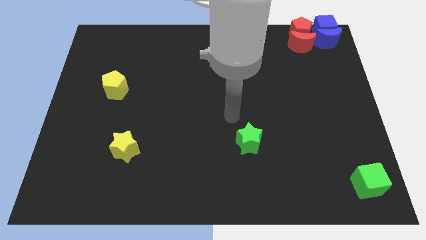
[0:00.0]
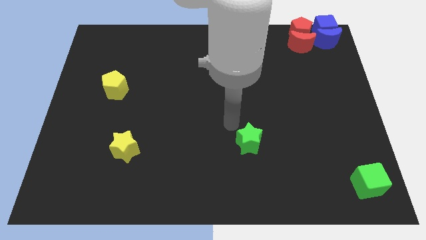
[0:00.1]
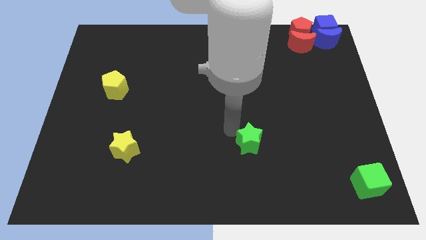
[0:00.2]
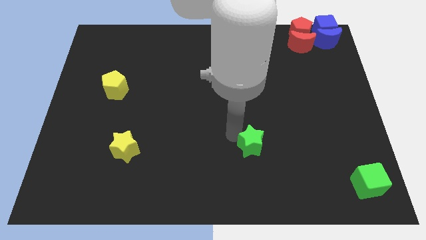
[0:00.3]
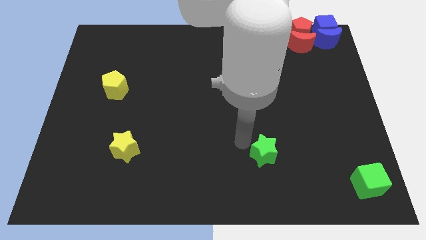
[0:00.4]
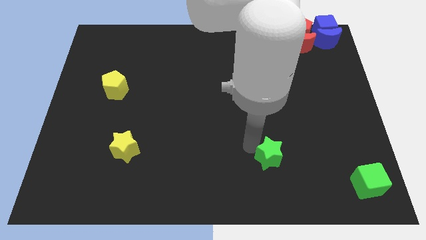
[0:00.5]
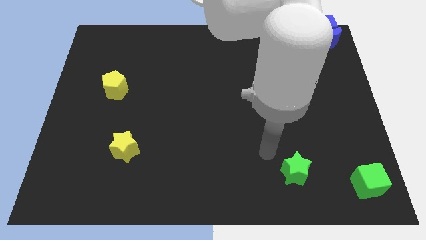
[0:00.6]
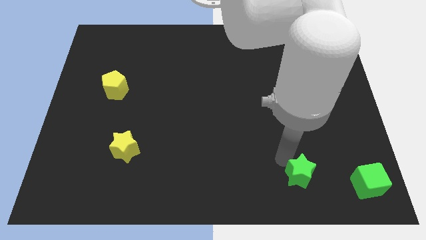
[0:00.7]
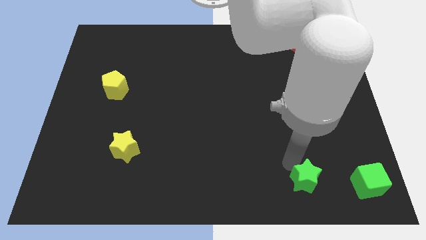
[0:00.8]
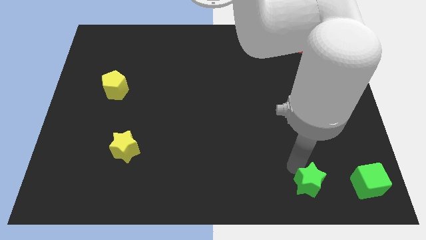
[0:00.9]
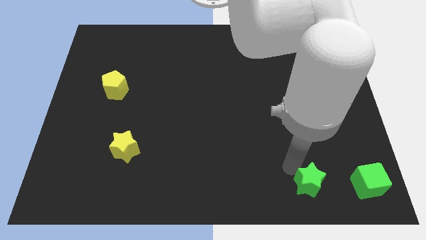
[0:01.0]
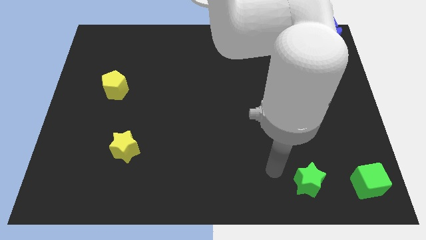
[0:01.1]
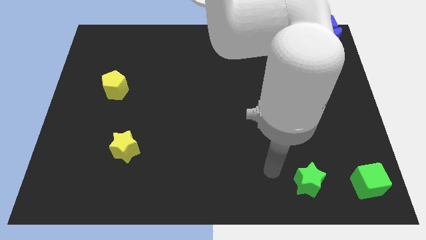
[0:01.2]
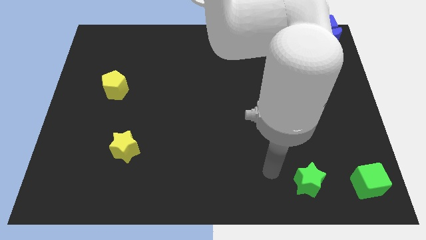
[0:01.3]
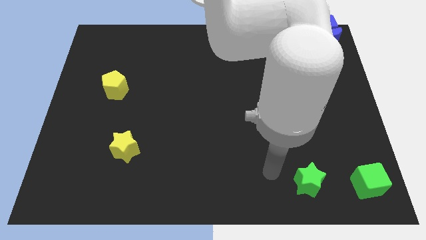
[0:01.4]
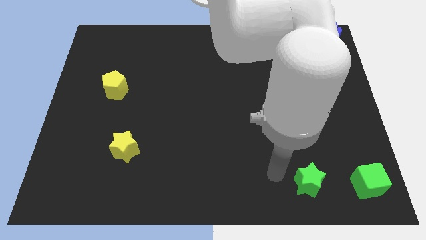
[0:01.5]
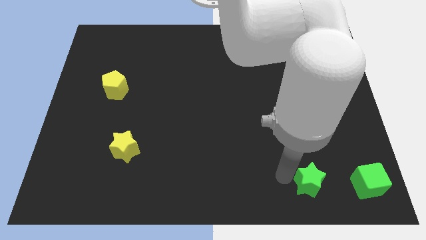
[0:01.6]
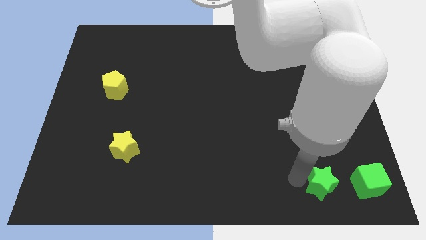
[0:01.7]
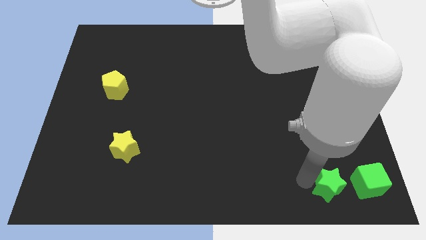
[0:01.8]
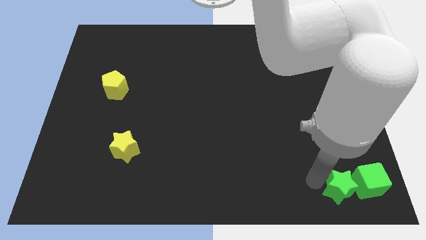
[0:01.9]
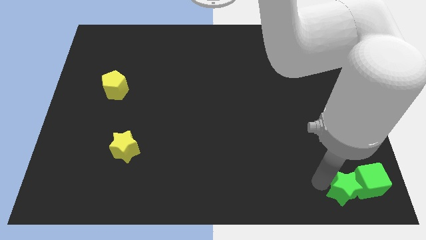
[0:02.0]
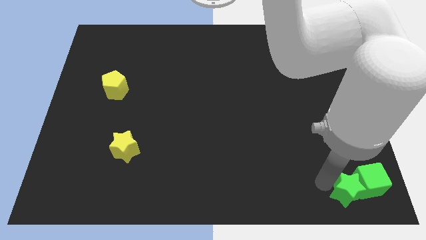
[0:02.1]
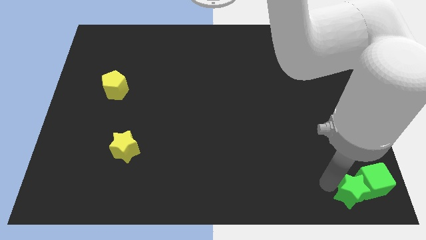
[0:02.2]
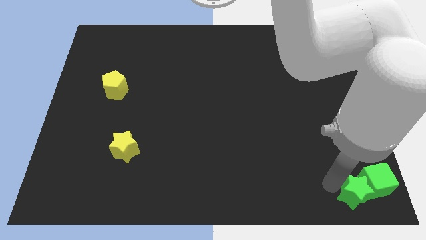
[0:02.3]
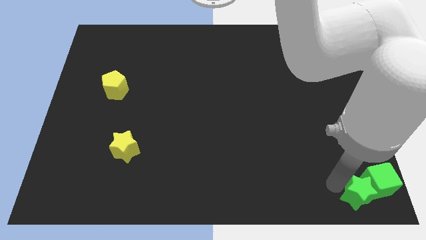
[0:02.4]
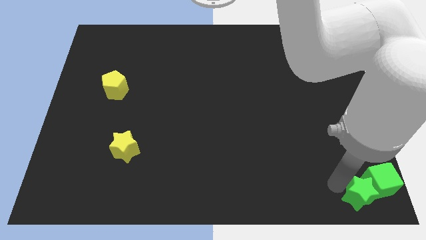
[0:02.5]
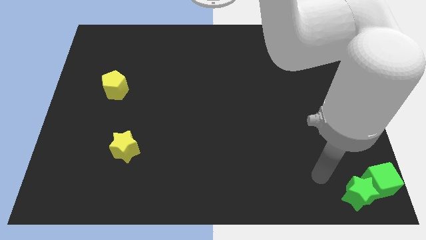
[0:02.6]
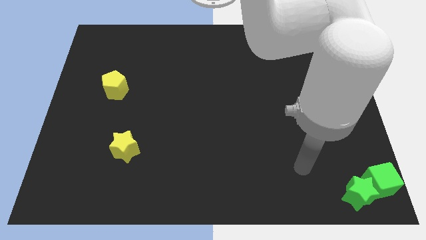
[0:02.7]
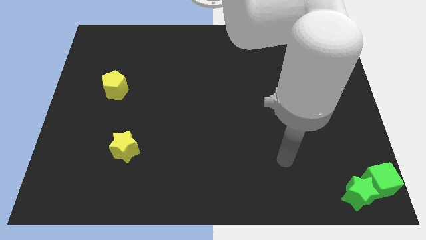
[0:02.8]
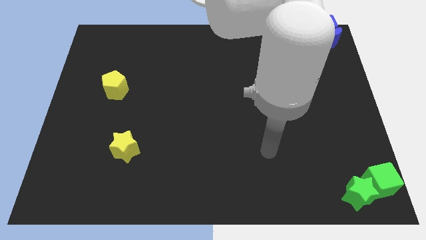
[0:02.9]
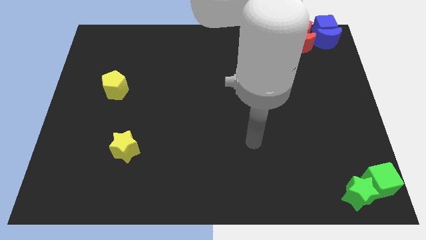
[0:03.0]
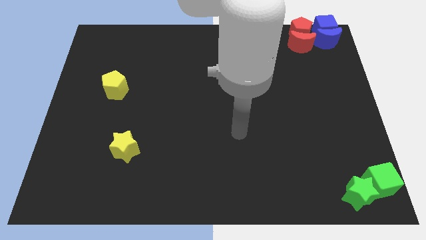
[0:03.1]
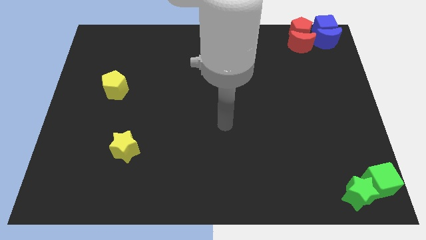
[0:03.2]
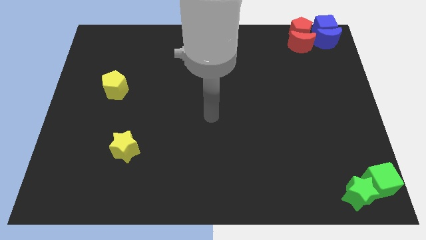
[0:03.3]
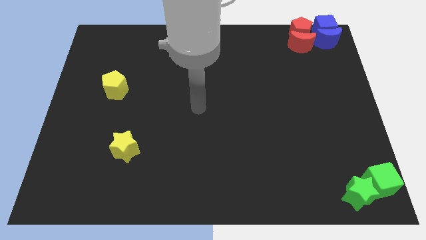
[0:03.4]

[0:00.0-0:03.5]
push green star in to green cube

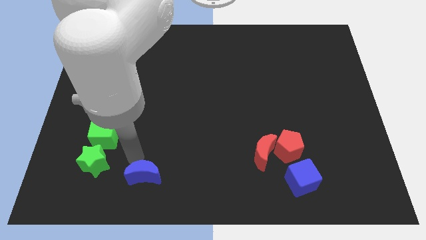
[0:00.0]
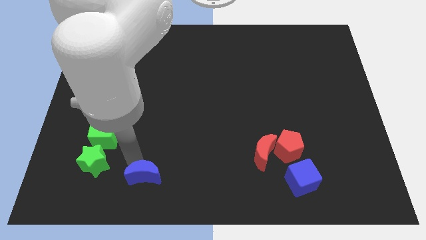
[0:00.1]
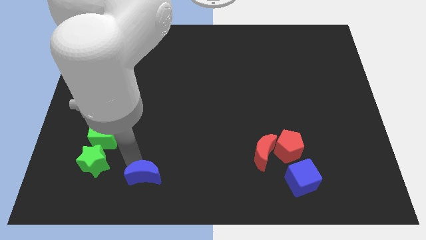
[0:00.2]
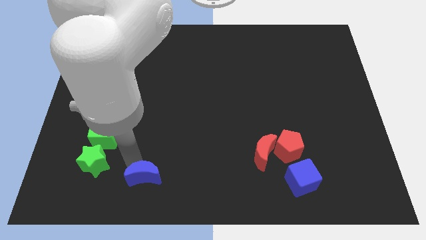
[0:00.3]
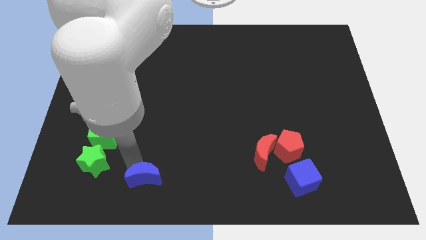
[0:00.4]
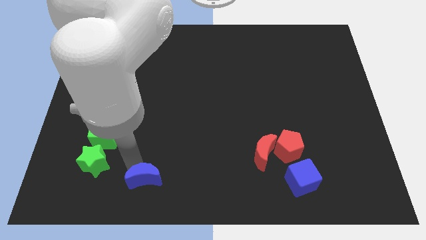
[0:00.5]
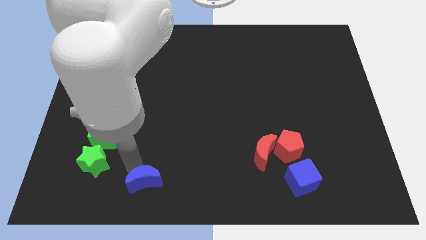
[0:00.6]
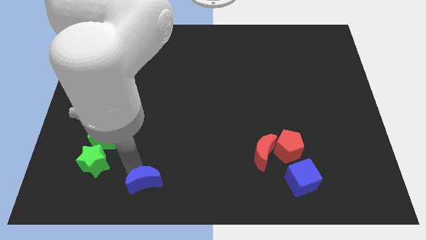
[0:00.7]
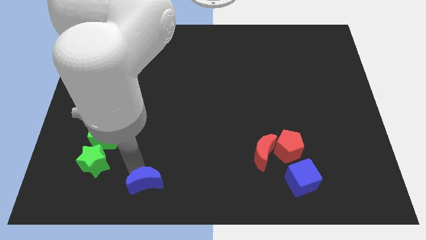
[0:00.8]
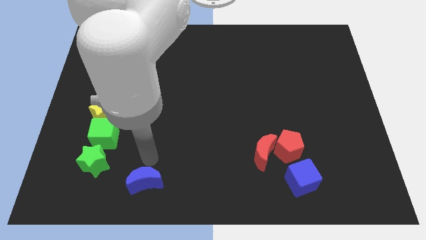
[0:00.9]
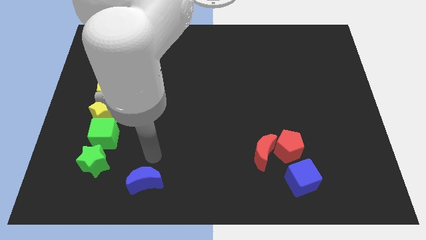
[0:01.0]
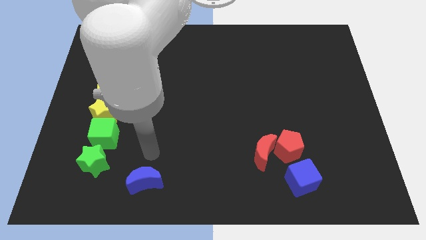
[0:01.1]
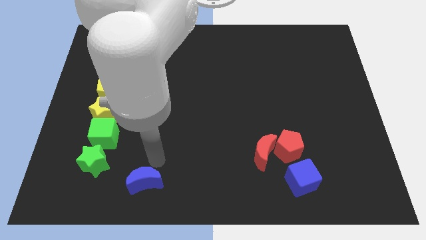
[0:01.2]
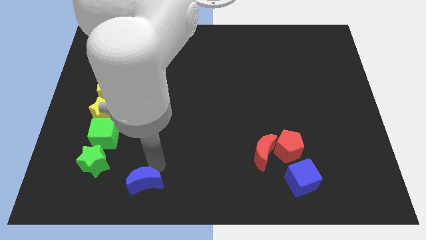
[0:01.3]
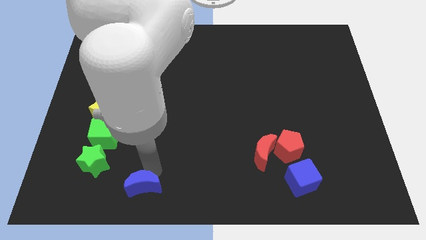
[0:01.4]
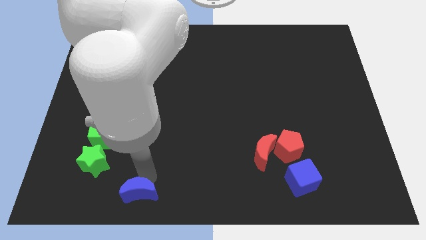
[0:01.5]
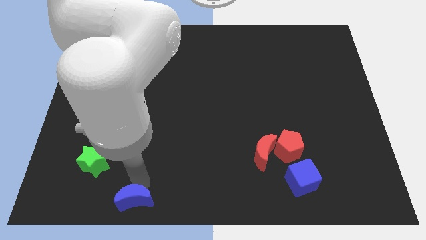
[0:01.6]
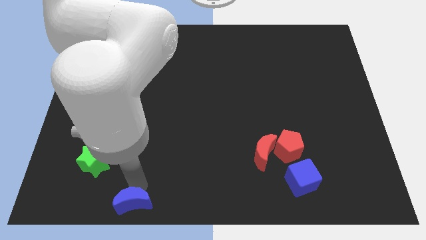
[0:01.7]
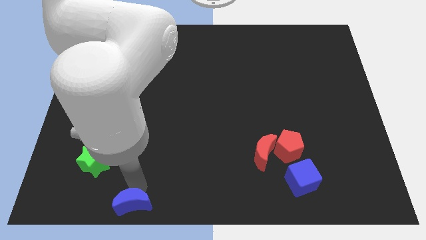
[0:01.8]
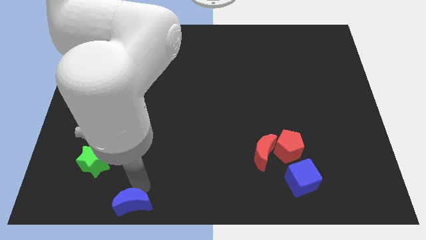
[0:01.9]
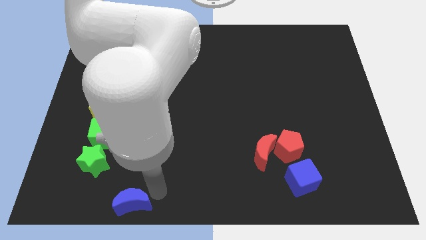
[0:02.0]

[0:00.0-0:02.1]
push blue moon slightly downwards

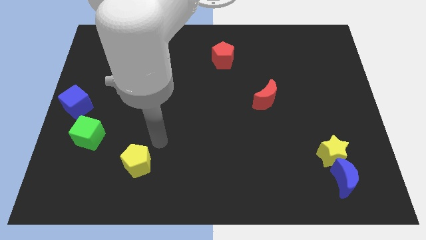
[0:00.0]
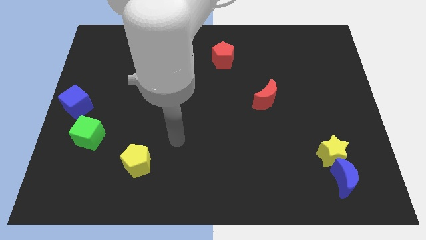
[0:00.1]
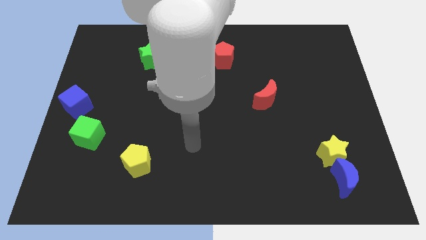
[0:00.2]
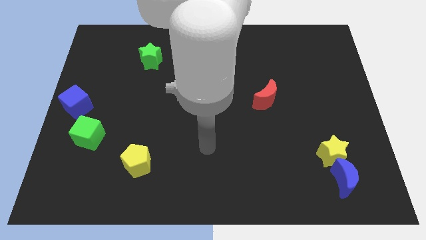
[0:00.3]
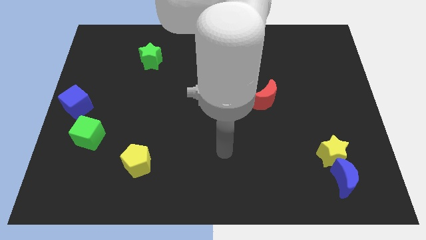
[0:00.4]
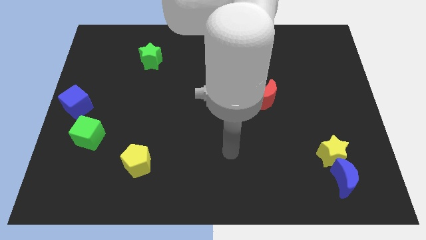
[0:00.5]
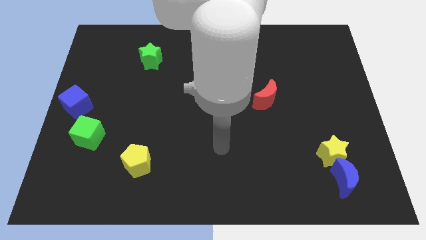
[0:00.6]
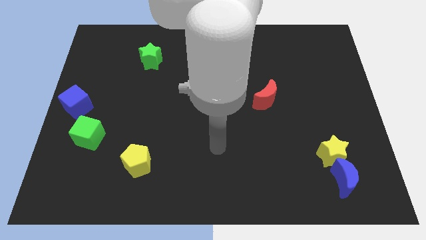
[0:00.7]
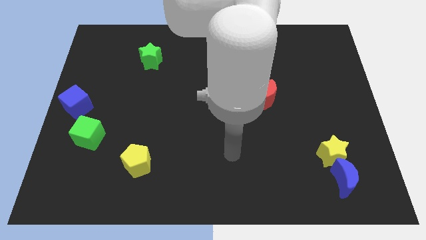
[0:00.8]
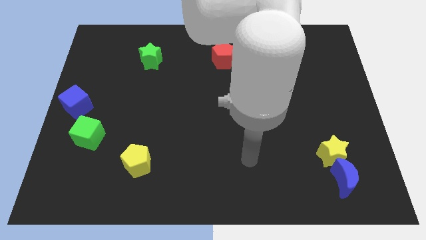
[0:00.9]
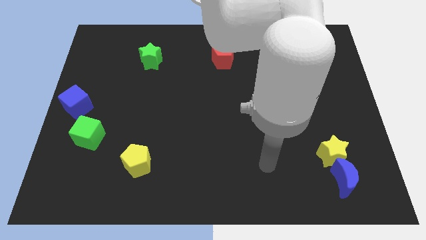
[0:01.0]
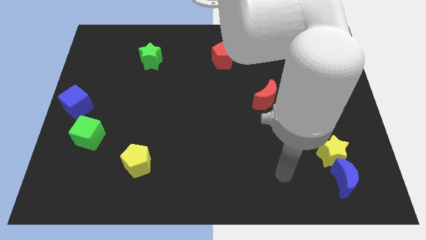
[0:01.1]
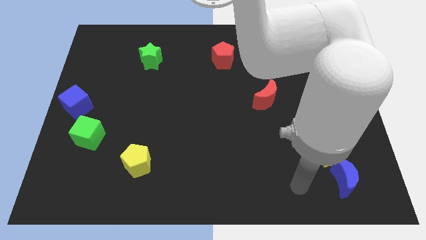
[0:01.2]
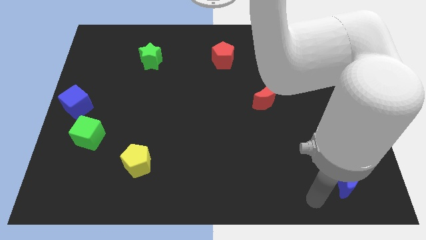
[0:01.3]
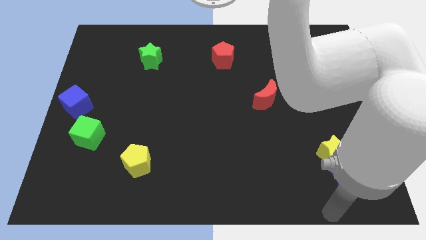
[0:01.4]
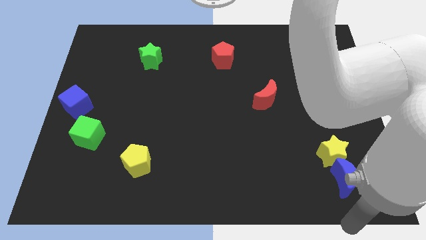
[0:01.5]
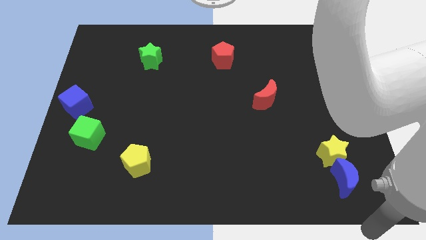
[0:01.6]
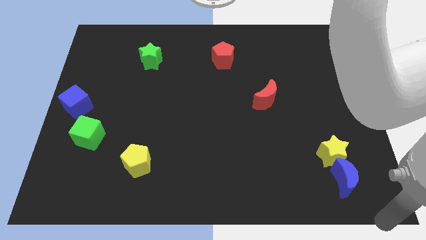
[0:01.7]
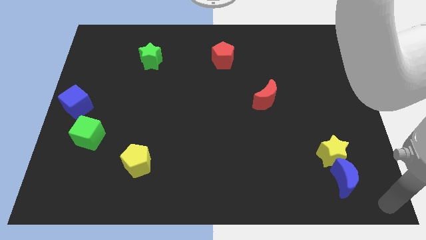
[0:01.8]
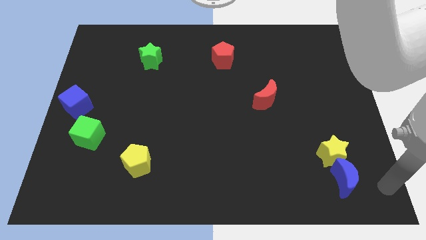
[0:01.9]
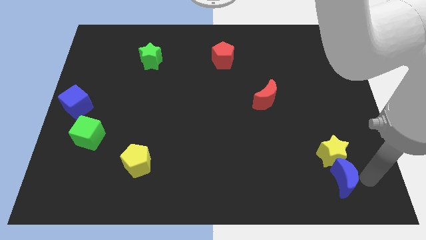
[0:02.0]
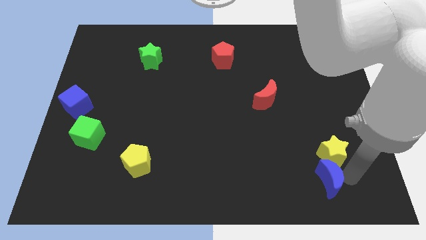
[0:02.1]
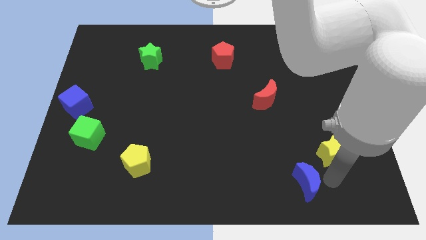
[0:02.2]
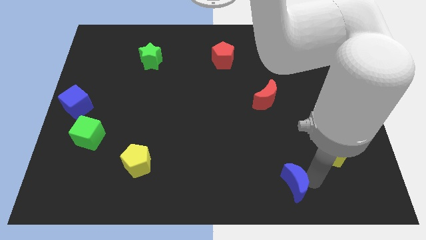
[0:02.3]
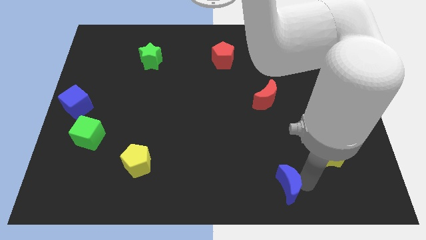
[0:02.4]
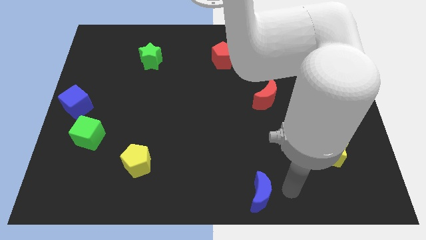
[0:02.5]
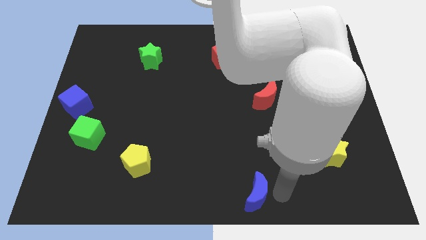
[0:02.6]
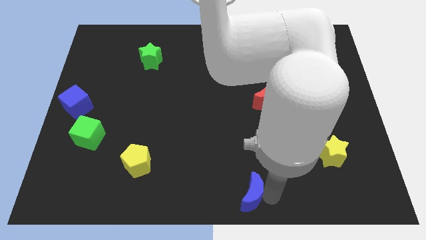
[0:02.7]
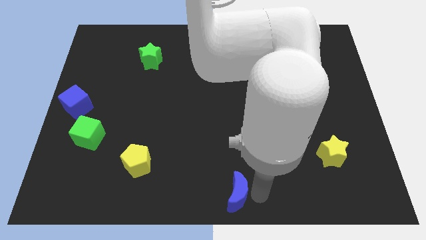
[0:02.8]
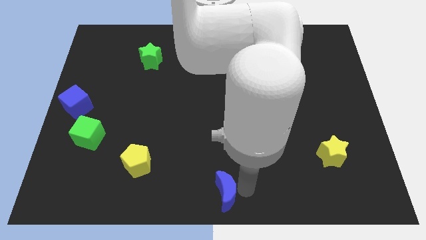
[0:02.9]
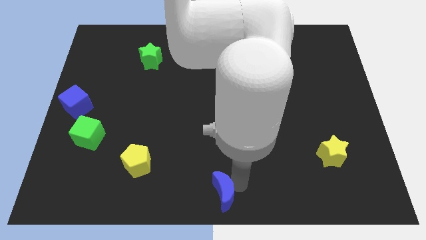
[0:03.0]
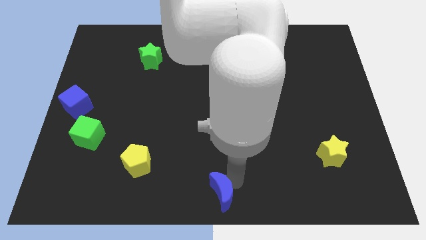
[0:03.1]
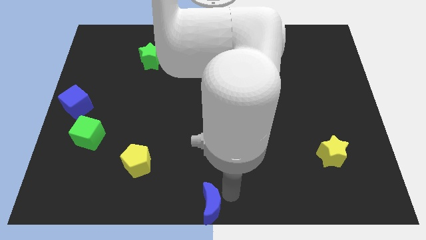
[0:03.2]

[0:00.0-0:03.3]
slide the blue moon to the bottom center of the board
